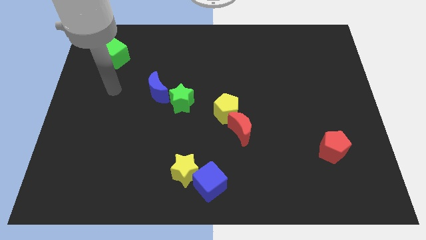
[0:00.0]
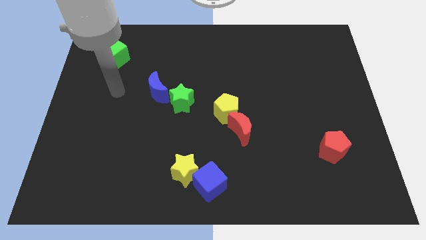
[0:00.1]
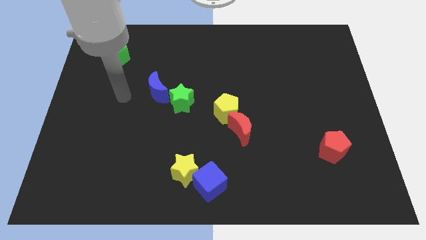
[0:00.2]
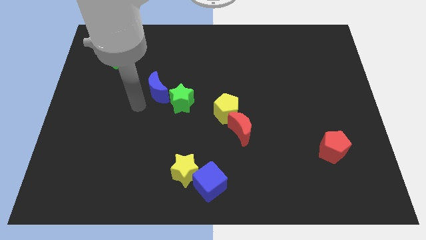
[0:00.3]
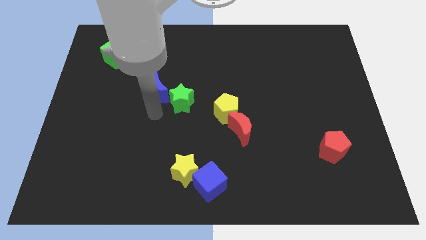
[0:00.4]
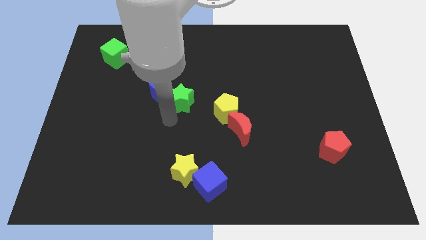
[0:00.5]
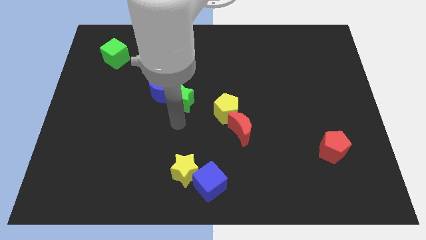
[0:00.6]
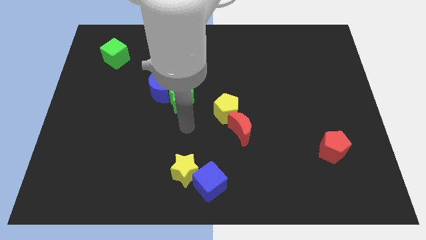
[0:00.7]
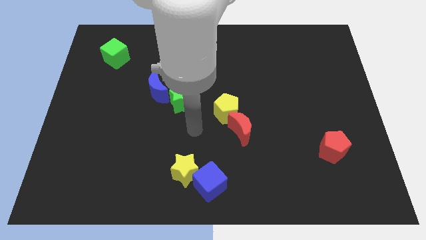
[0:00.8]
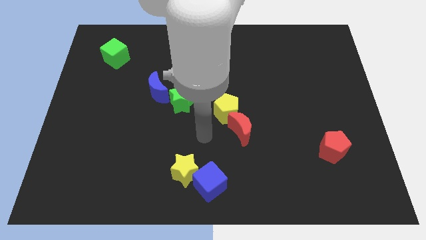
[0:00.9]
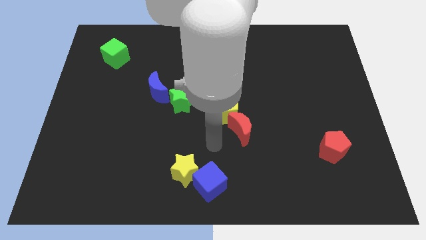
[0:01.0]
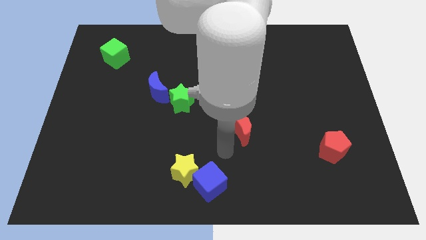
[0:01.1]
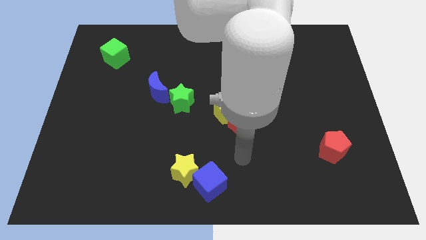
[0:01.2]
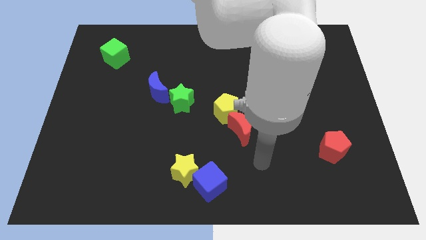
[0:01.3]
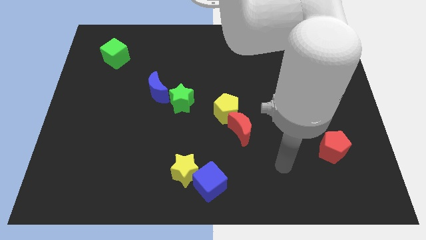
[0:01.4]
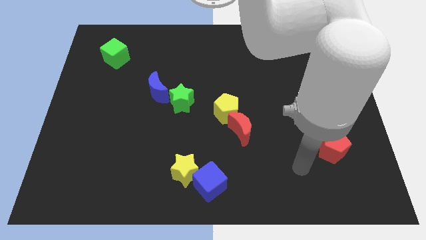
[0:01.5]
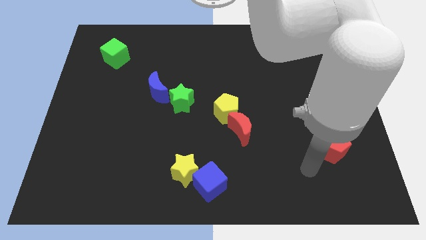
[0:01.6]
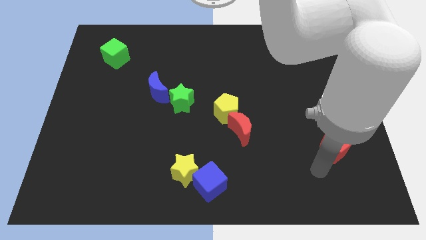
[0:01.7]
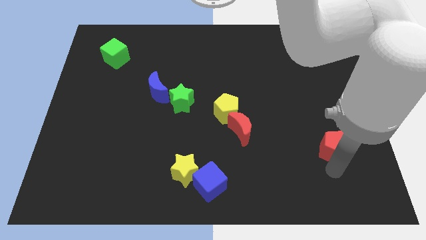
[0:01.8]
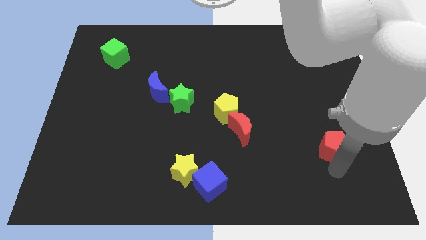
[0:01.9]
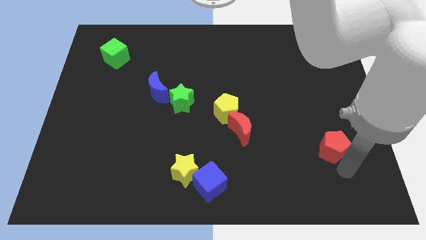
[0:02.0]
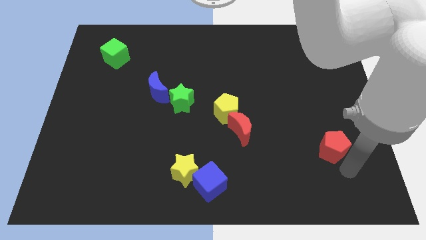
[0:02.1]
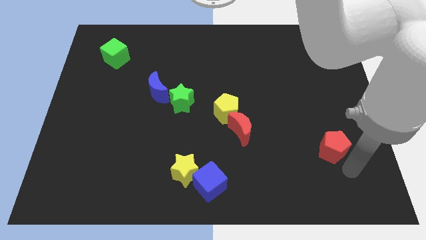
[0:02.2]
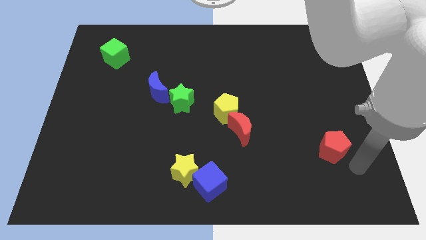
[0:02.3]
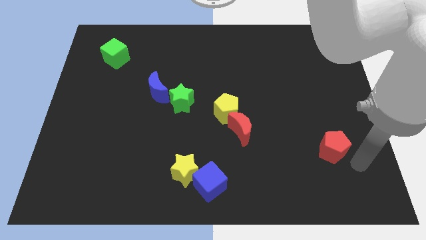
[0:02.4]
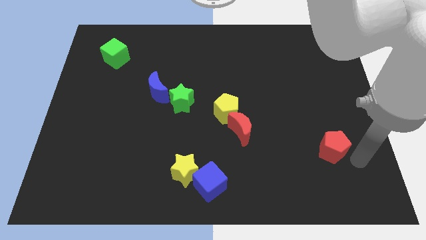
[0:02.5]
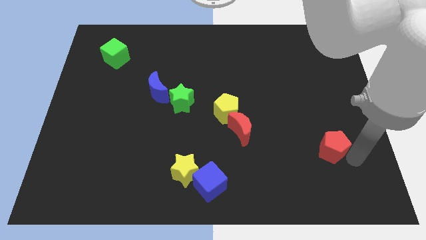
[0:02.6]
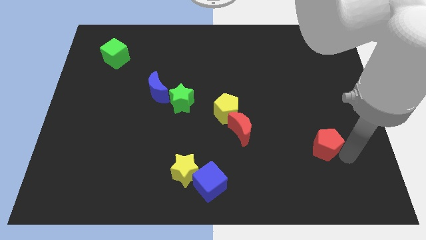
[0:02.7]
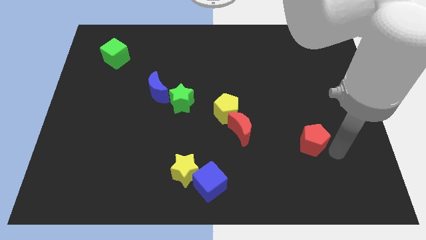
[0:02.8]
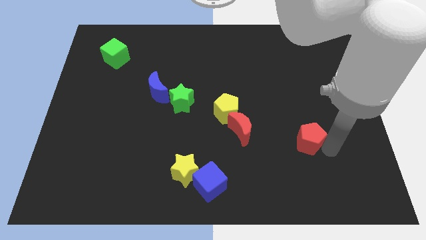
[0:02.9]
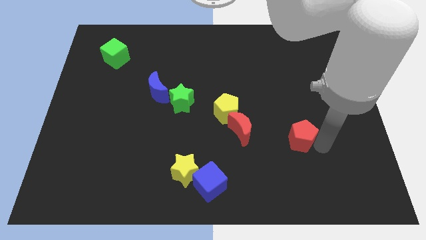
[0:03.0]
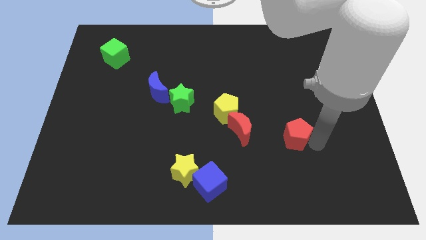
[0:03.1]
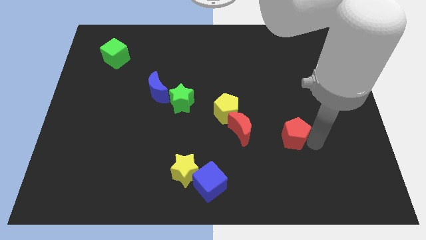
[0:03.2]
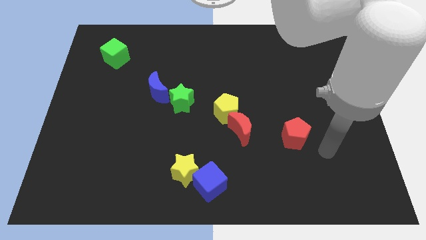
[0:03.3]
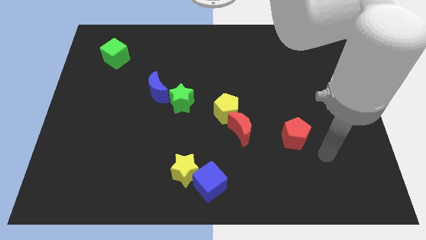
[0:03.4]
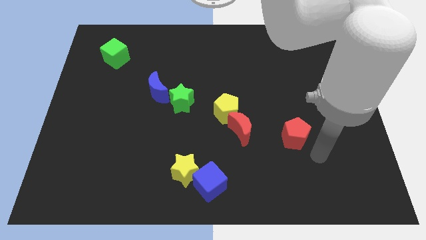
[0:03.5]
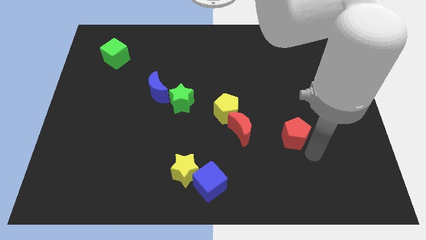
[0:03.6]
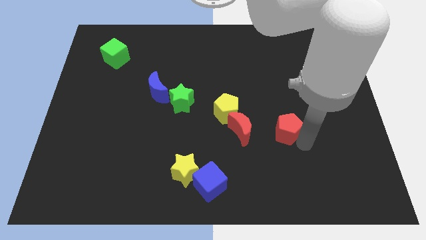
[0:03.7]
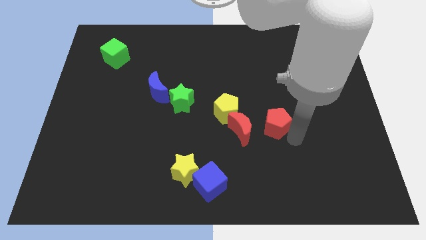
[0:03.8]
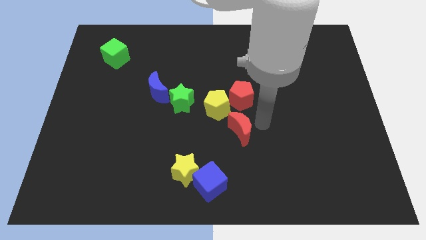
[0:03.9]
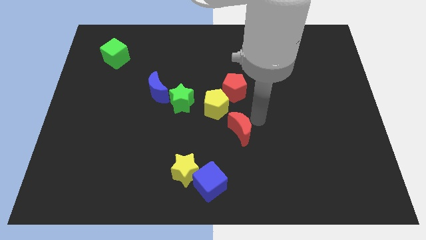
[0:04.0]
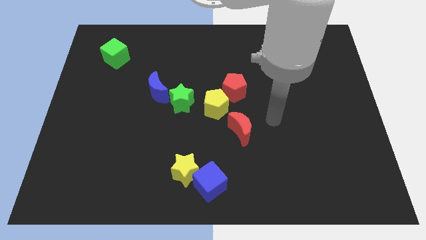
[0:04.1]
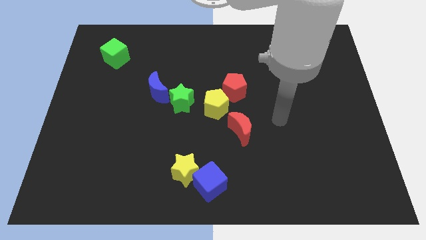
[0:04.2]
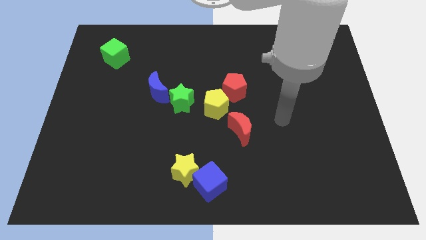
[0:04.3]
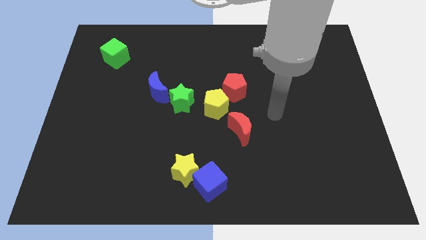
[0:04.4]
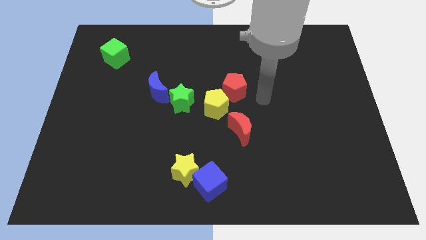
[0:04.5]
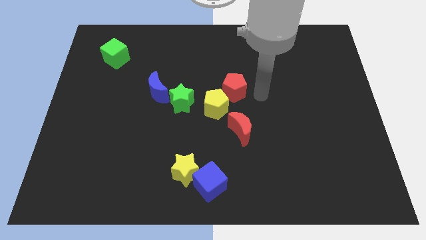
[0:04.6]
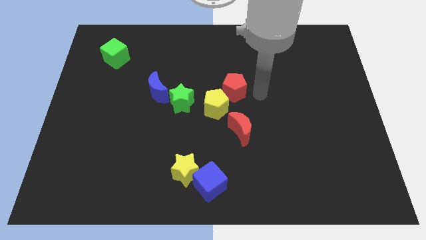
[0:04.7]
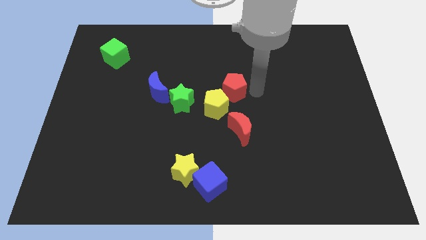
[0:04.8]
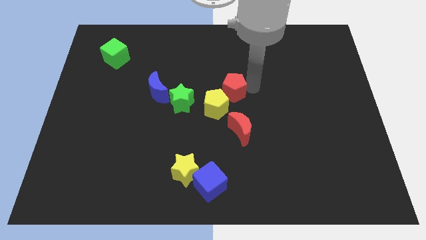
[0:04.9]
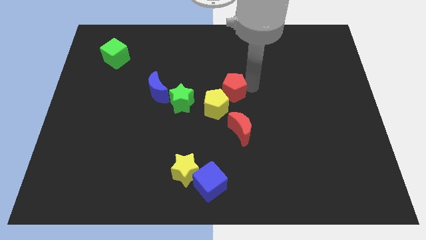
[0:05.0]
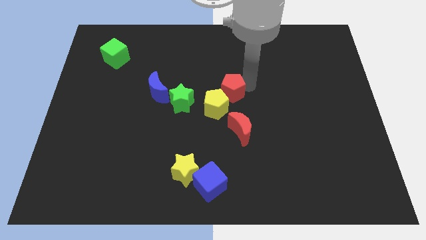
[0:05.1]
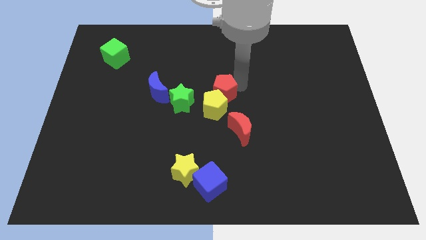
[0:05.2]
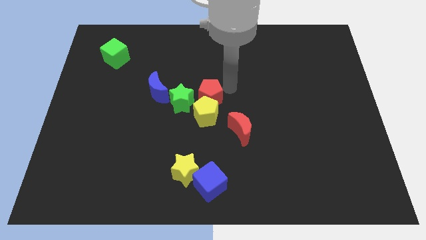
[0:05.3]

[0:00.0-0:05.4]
put the red pentagon towards the yellow pentagon

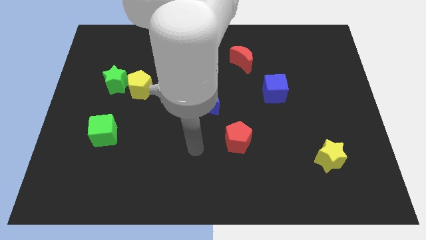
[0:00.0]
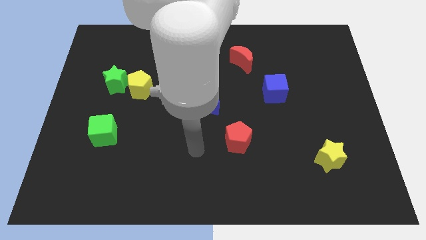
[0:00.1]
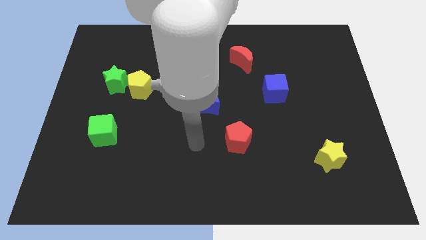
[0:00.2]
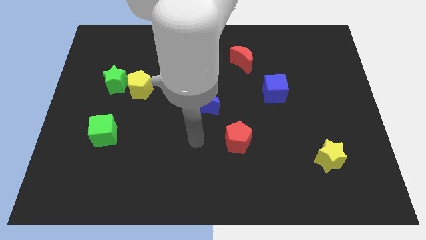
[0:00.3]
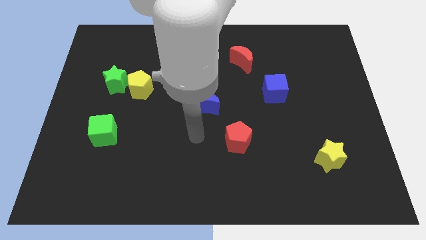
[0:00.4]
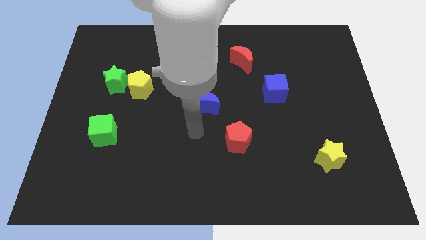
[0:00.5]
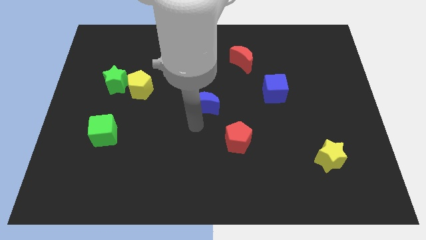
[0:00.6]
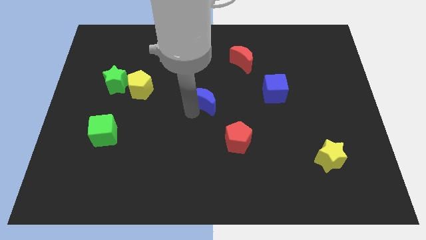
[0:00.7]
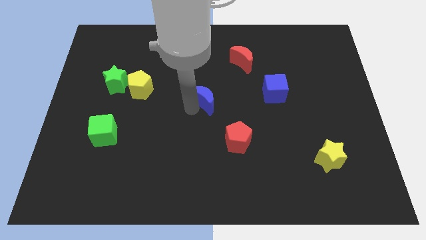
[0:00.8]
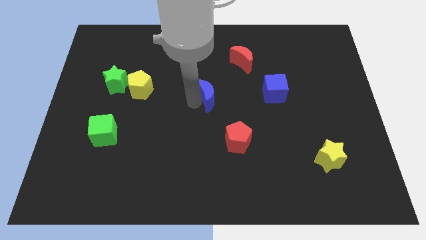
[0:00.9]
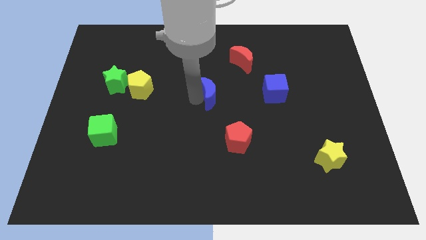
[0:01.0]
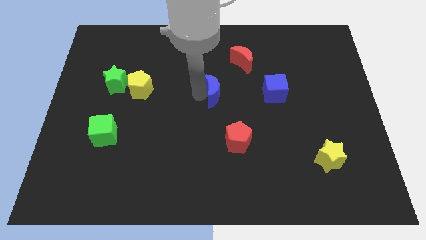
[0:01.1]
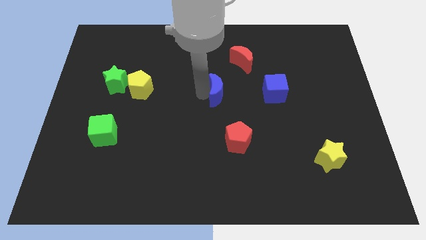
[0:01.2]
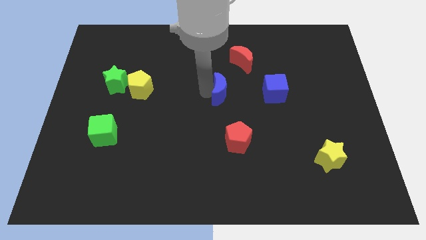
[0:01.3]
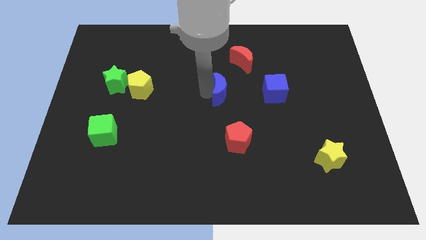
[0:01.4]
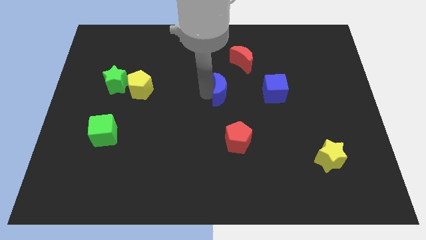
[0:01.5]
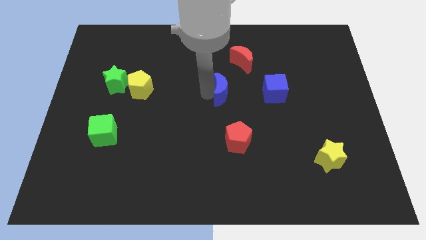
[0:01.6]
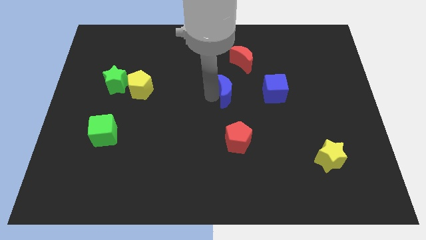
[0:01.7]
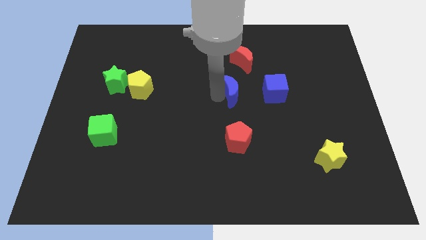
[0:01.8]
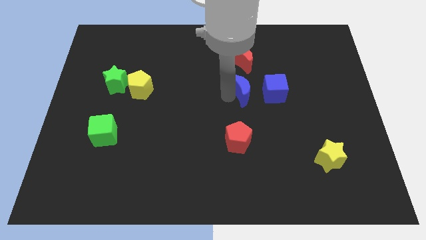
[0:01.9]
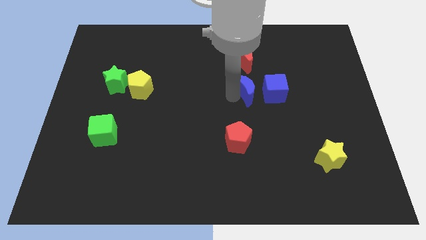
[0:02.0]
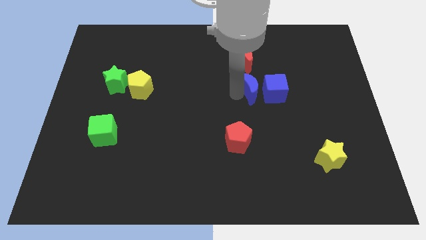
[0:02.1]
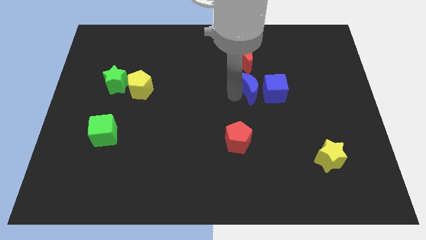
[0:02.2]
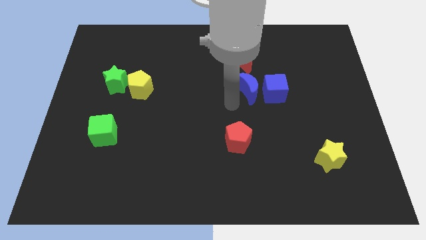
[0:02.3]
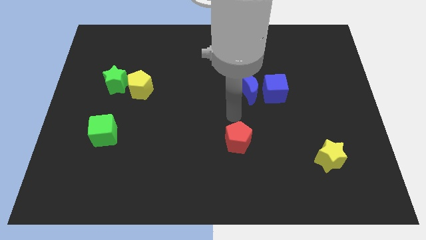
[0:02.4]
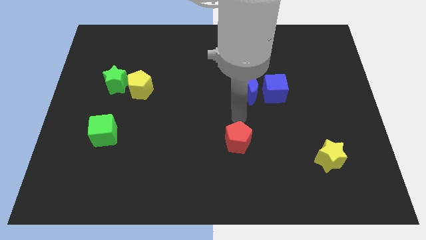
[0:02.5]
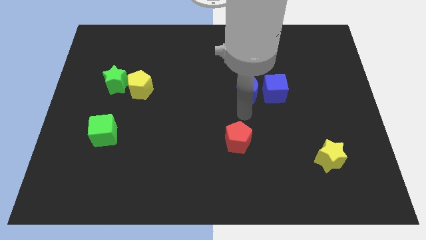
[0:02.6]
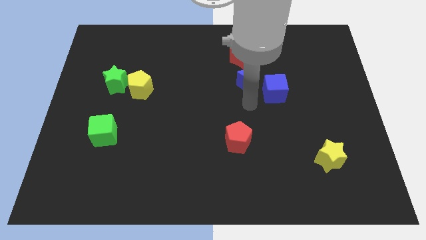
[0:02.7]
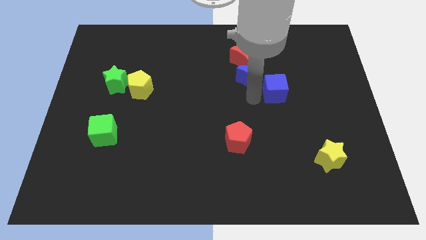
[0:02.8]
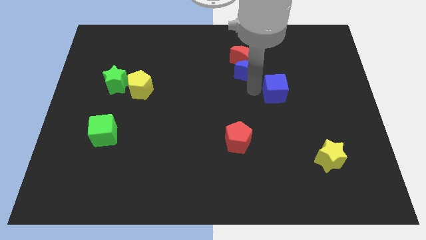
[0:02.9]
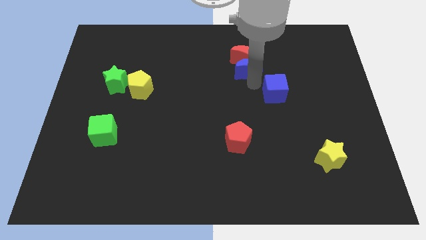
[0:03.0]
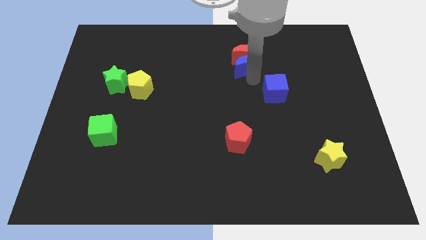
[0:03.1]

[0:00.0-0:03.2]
put the blue moon to the red moon
